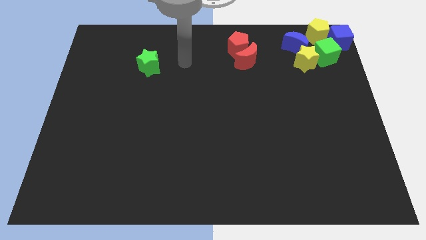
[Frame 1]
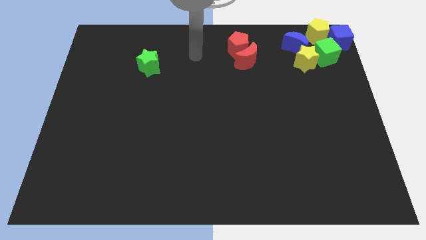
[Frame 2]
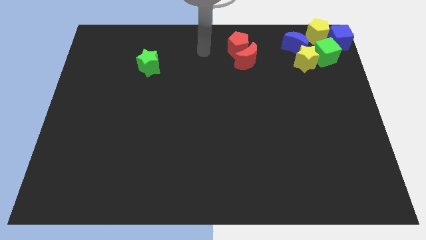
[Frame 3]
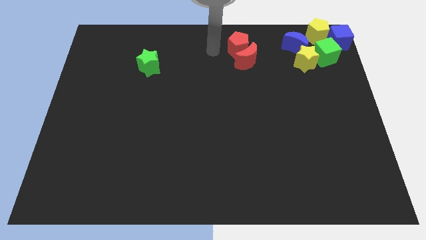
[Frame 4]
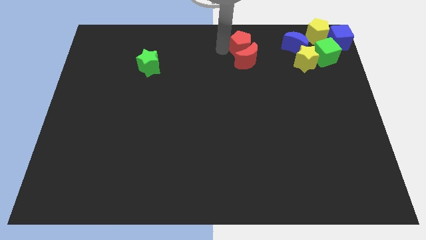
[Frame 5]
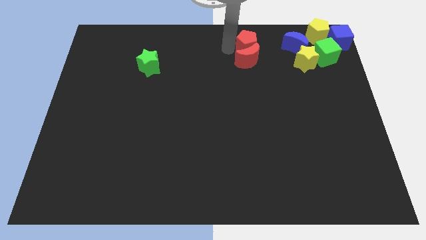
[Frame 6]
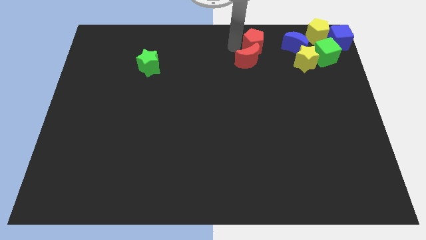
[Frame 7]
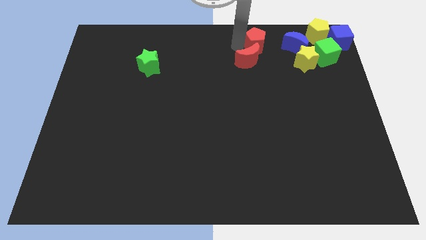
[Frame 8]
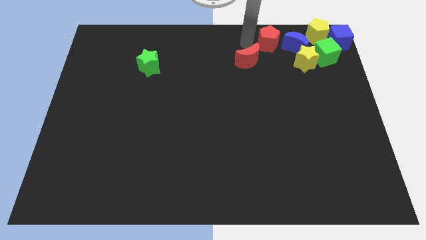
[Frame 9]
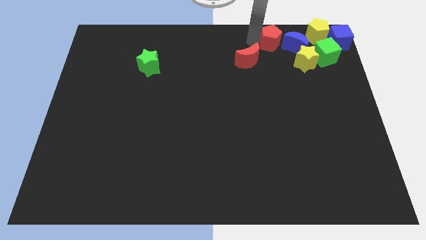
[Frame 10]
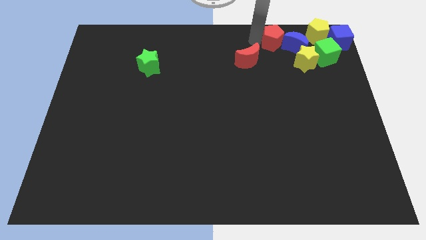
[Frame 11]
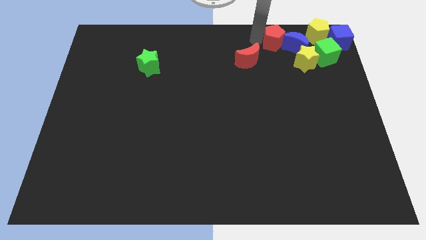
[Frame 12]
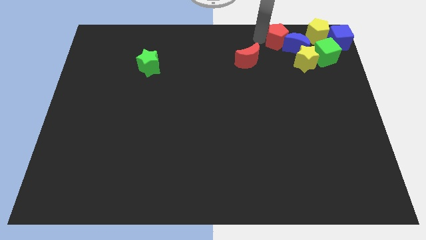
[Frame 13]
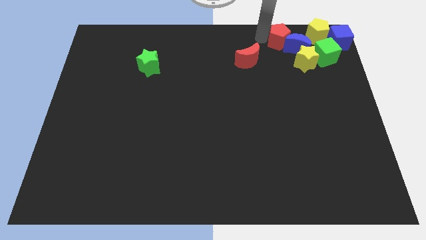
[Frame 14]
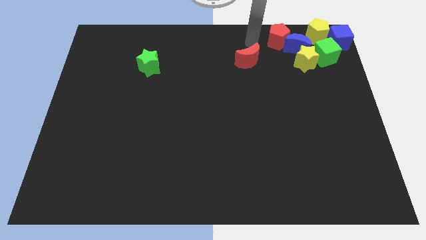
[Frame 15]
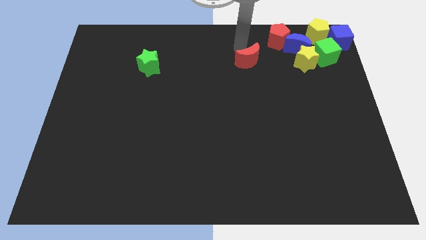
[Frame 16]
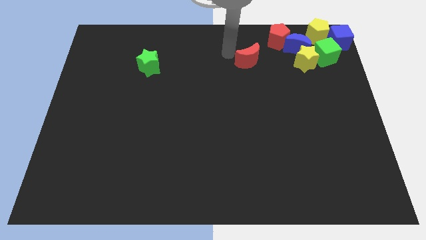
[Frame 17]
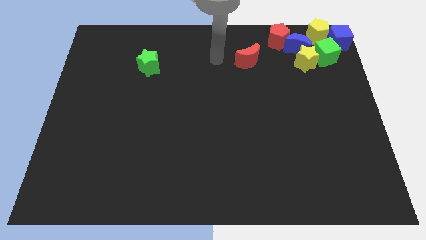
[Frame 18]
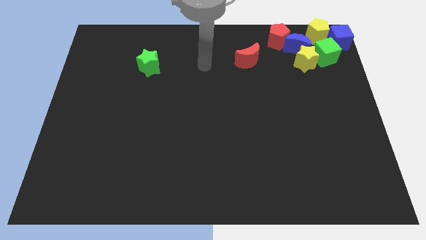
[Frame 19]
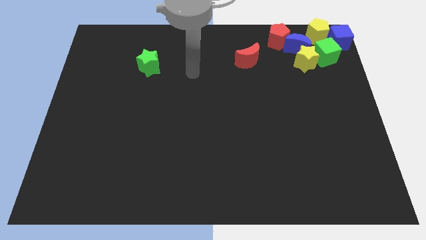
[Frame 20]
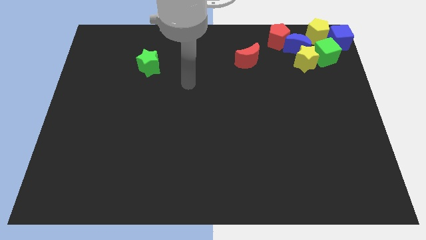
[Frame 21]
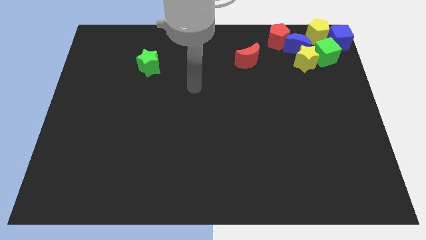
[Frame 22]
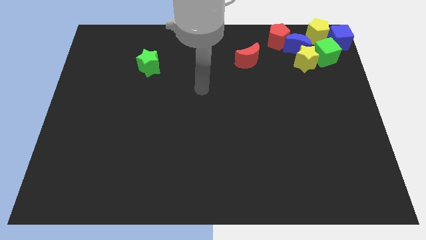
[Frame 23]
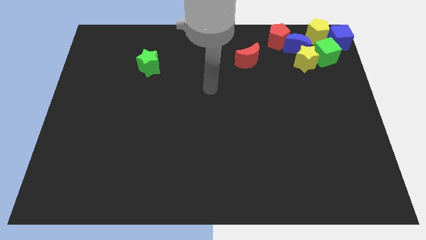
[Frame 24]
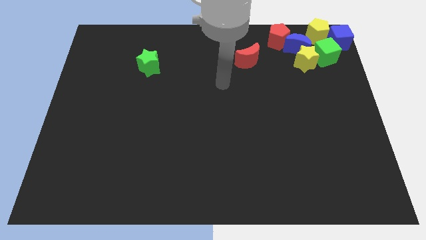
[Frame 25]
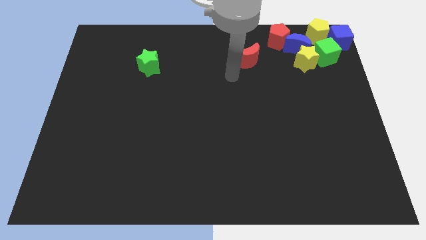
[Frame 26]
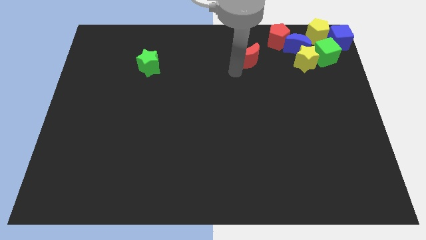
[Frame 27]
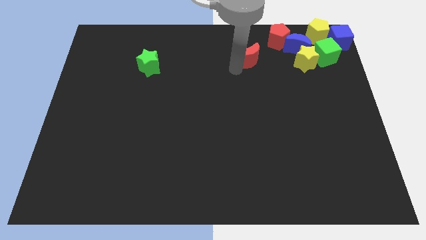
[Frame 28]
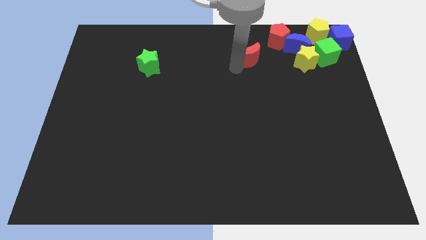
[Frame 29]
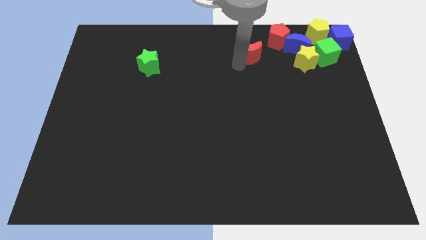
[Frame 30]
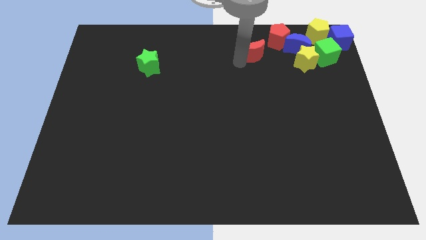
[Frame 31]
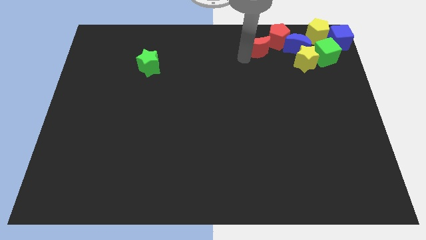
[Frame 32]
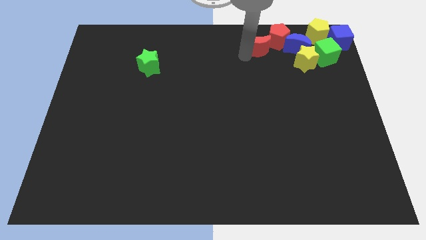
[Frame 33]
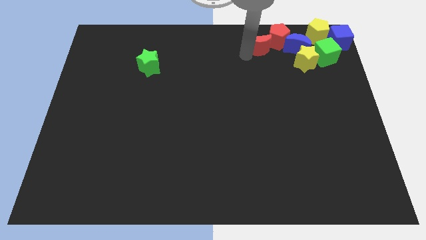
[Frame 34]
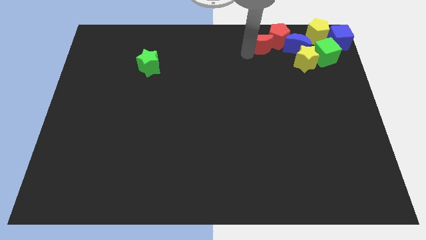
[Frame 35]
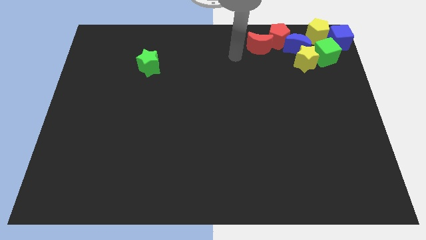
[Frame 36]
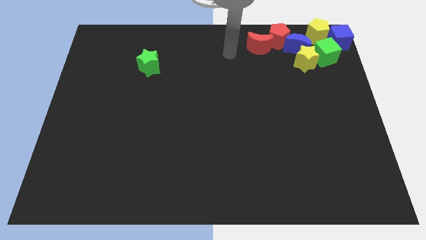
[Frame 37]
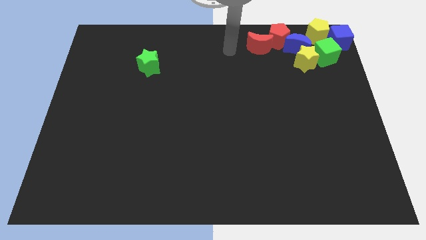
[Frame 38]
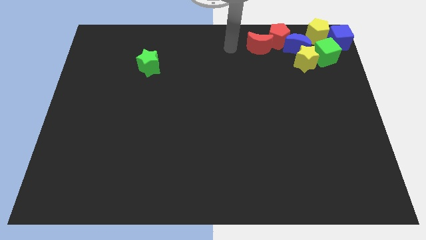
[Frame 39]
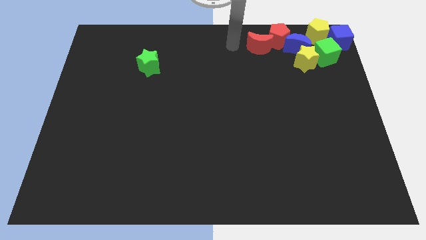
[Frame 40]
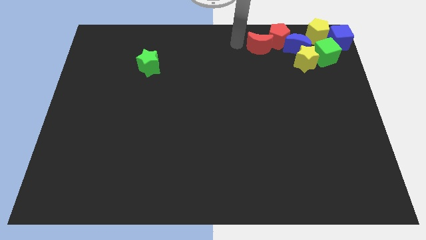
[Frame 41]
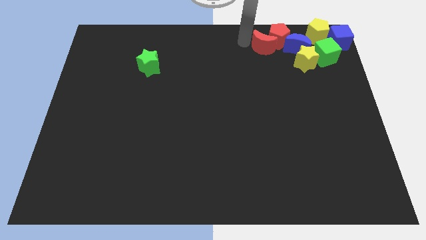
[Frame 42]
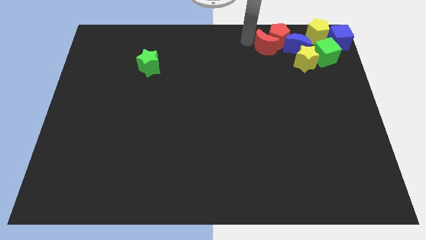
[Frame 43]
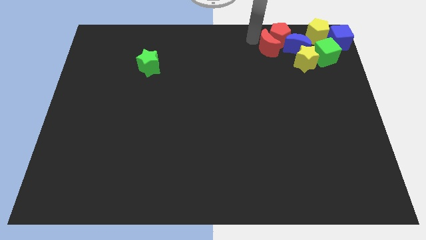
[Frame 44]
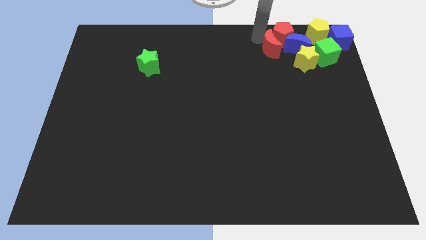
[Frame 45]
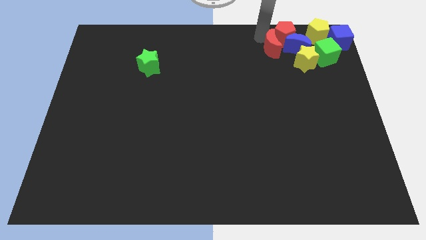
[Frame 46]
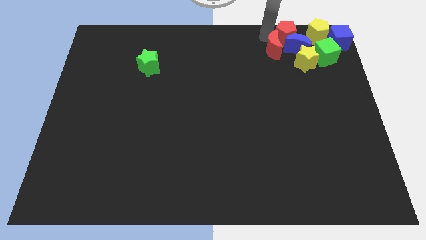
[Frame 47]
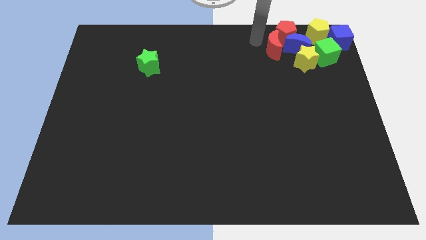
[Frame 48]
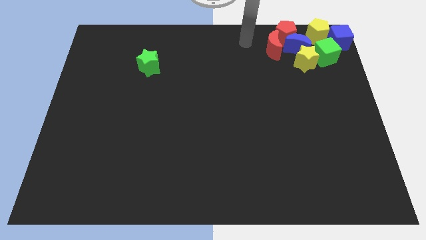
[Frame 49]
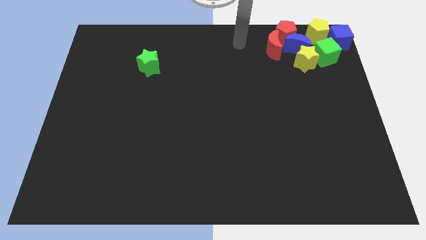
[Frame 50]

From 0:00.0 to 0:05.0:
push the red pentagon red crescent to the top of the blue crescent

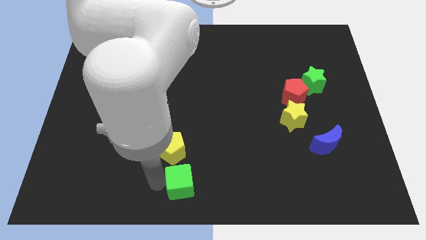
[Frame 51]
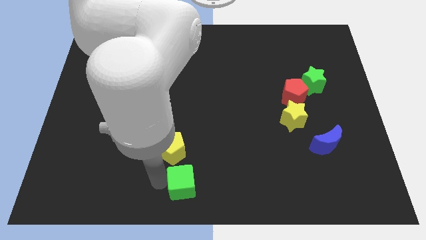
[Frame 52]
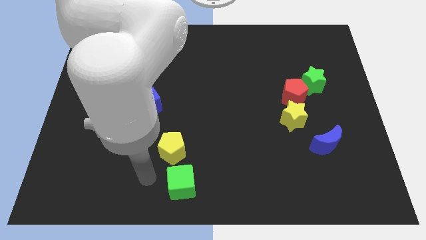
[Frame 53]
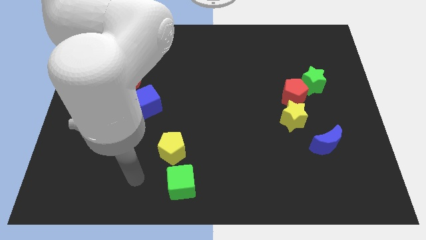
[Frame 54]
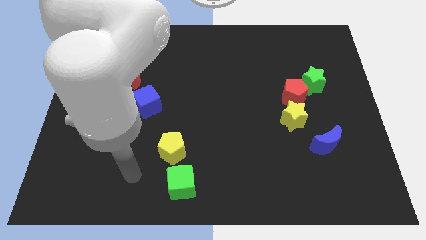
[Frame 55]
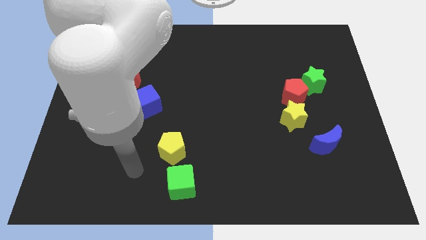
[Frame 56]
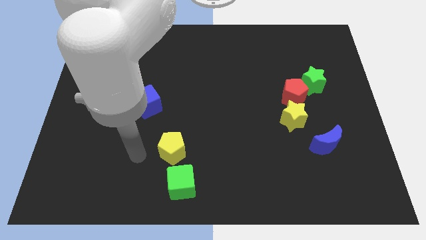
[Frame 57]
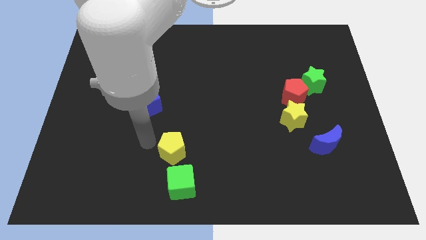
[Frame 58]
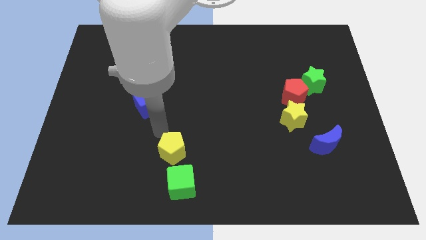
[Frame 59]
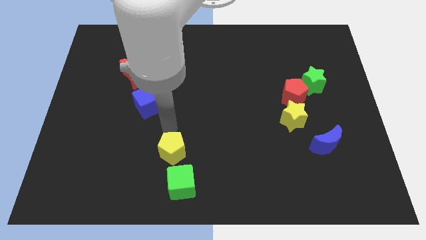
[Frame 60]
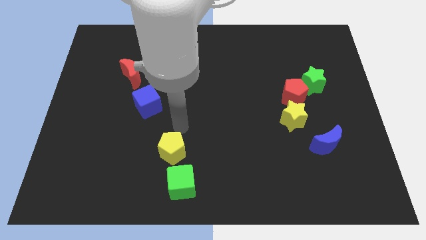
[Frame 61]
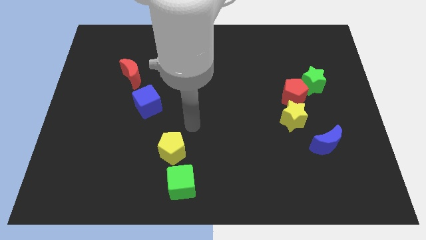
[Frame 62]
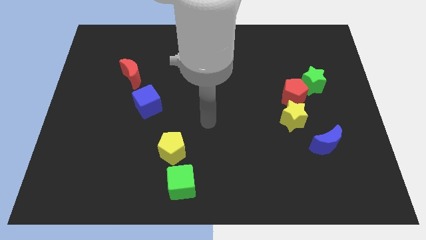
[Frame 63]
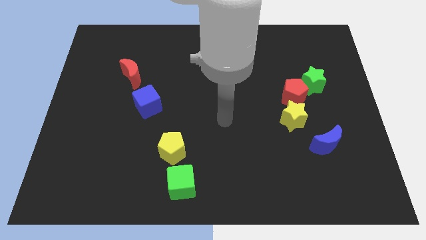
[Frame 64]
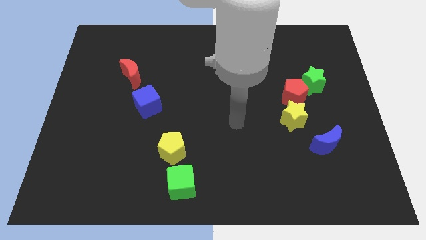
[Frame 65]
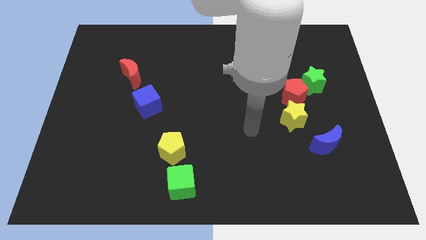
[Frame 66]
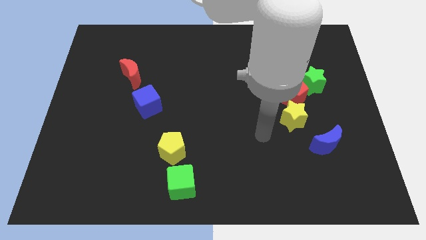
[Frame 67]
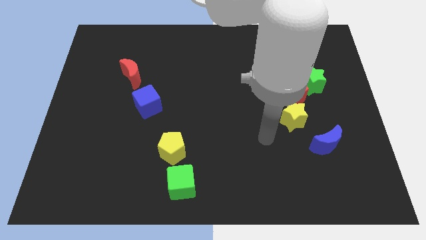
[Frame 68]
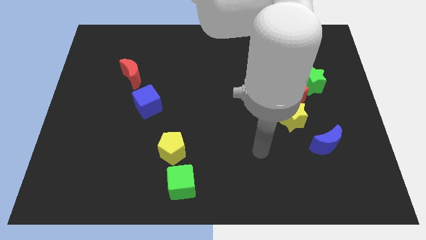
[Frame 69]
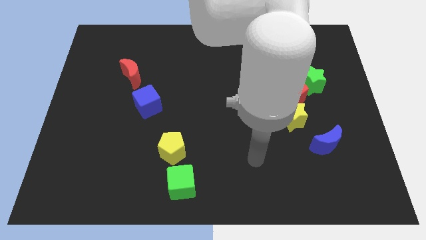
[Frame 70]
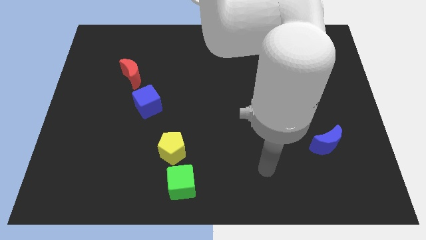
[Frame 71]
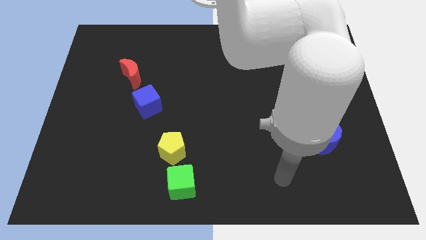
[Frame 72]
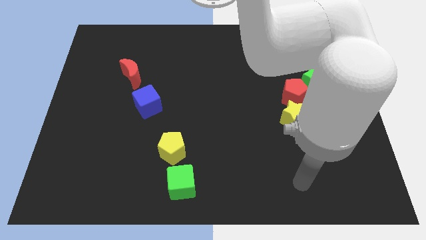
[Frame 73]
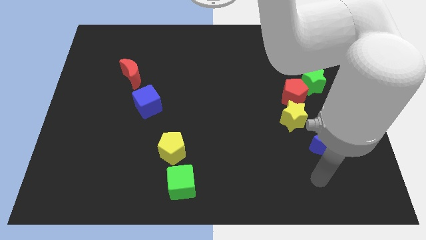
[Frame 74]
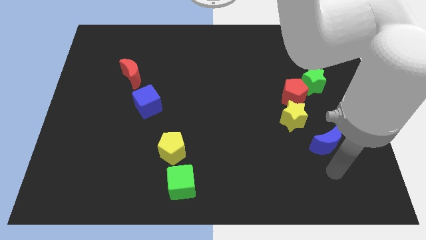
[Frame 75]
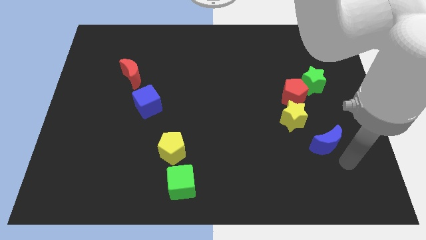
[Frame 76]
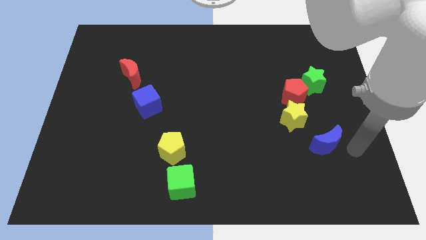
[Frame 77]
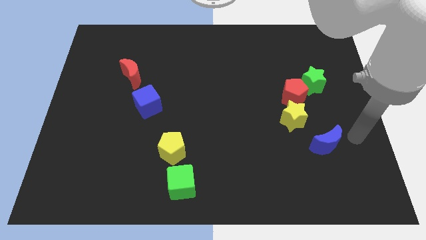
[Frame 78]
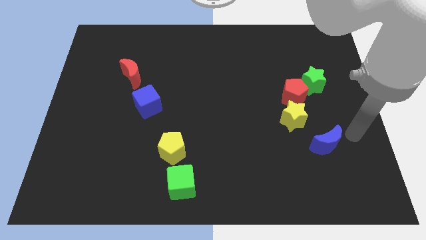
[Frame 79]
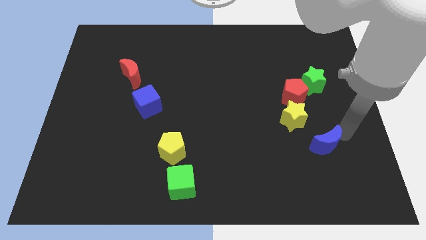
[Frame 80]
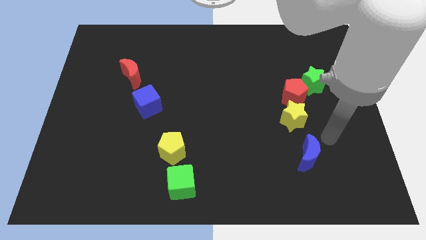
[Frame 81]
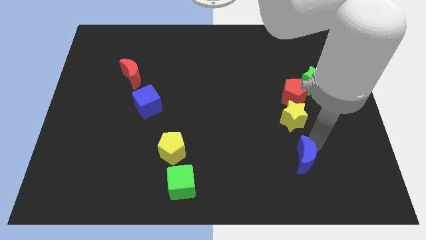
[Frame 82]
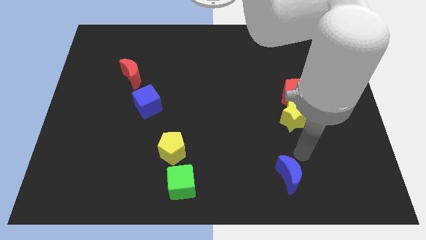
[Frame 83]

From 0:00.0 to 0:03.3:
push the blue moon downwards

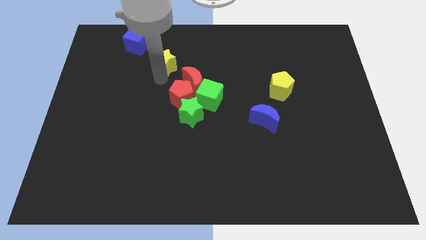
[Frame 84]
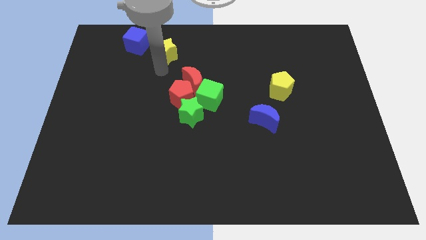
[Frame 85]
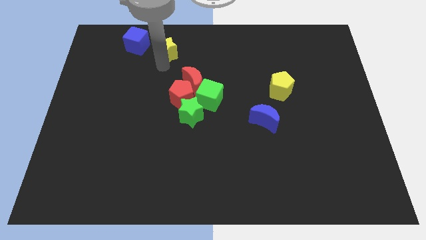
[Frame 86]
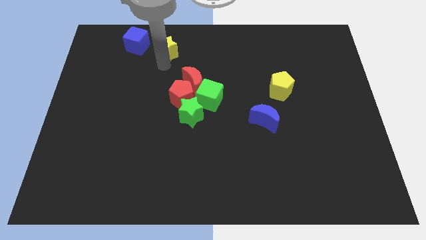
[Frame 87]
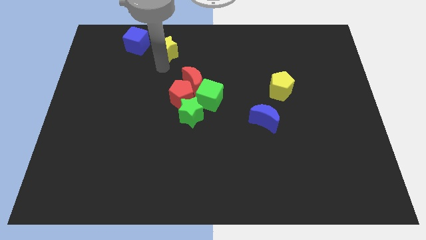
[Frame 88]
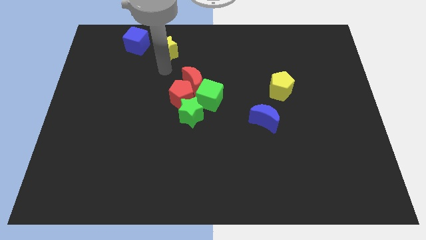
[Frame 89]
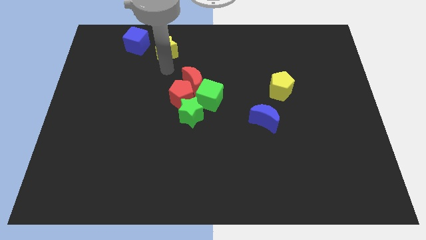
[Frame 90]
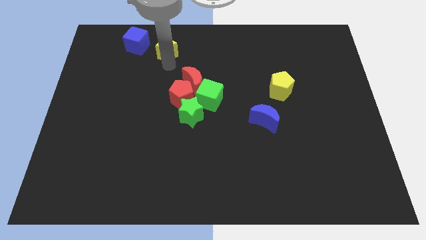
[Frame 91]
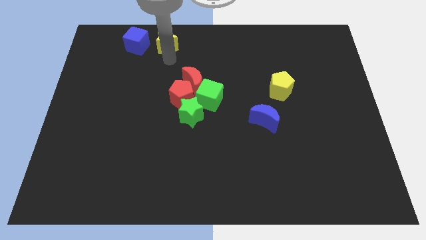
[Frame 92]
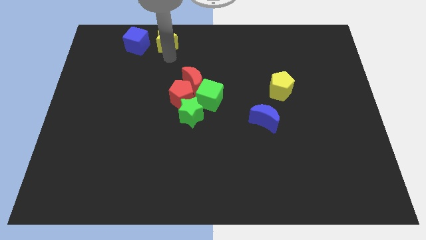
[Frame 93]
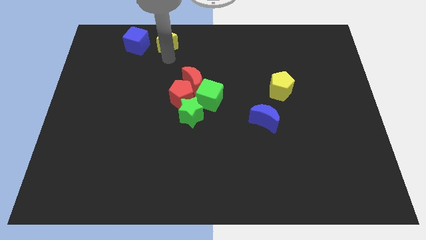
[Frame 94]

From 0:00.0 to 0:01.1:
move the yellow star to the top left side
